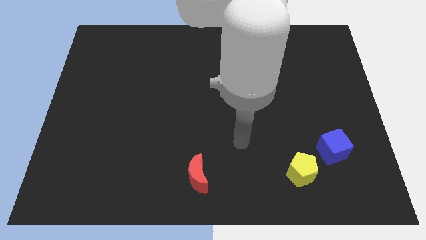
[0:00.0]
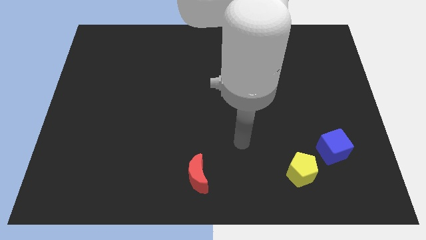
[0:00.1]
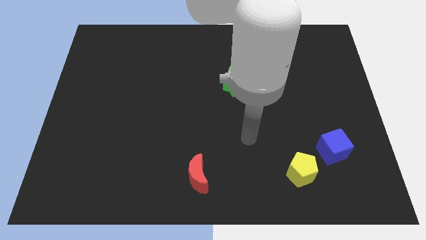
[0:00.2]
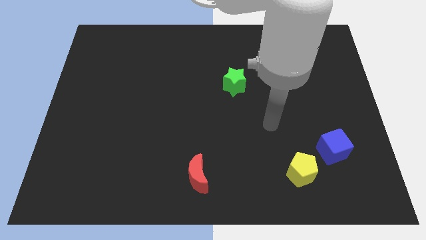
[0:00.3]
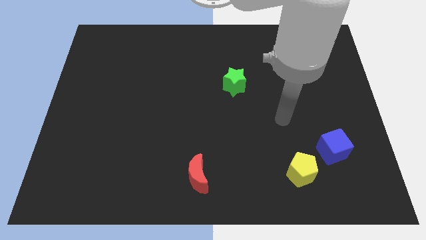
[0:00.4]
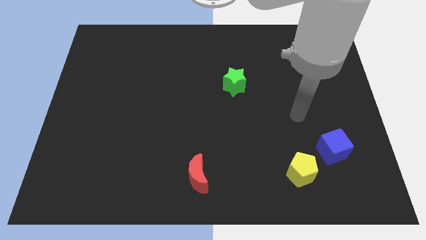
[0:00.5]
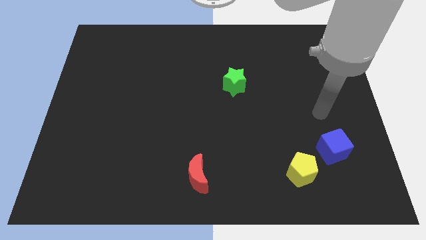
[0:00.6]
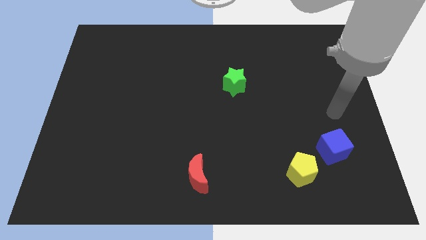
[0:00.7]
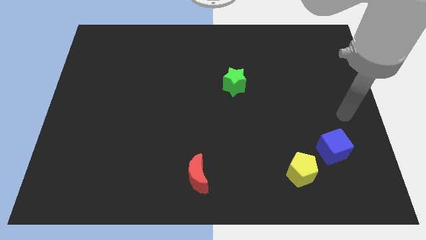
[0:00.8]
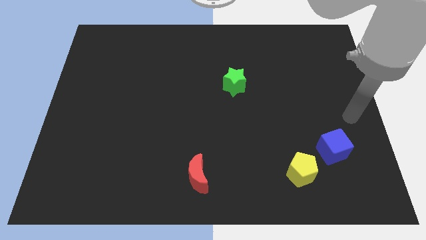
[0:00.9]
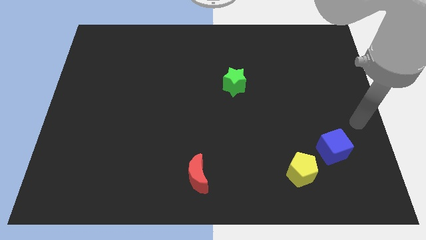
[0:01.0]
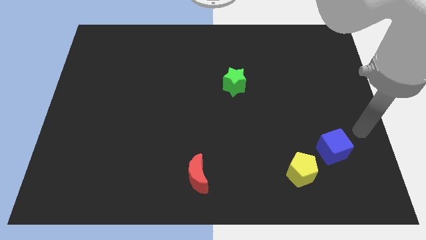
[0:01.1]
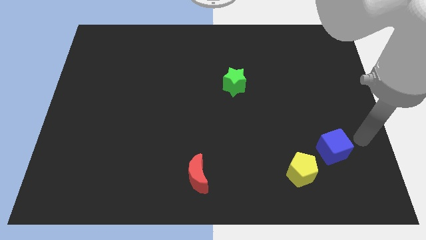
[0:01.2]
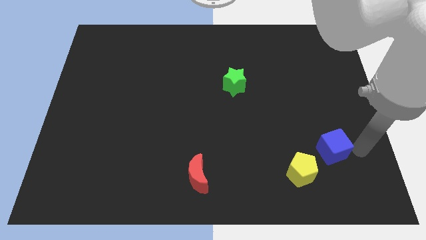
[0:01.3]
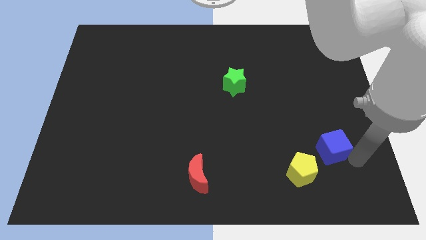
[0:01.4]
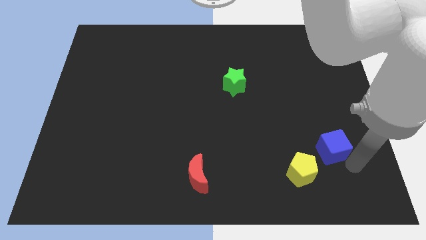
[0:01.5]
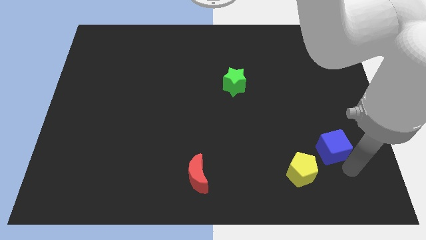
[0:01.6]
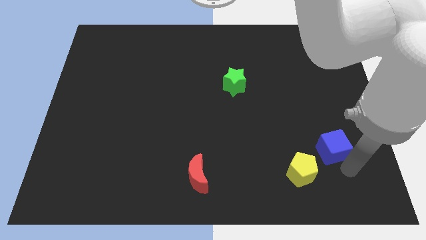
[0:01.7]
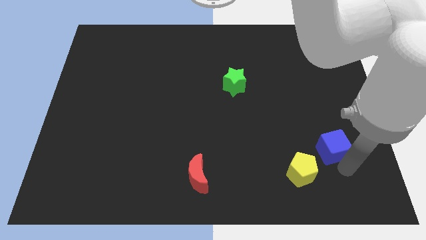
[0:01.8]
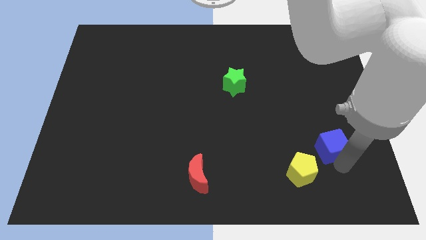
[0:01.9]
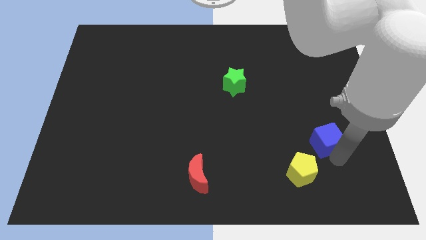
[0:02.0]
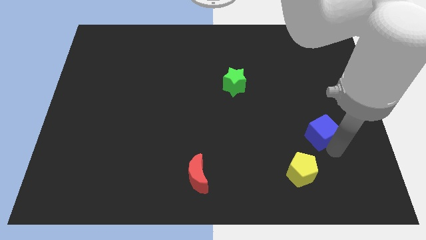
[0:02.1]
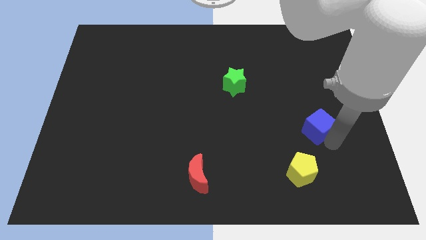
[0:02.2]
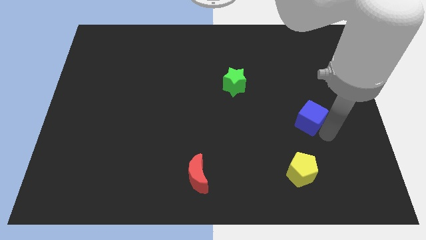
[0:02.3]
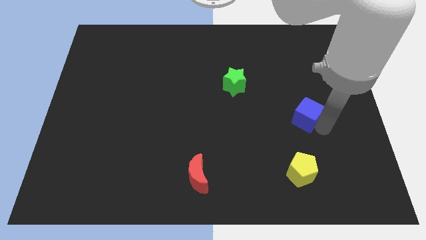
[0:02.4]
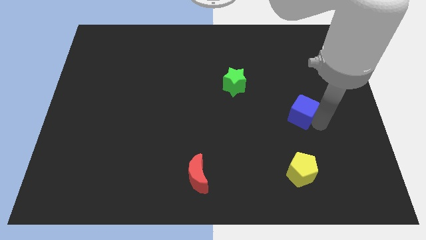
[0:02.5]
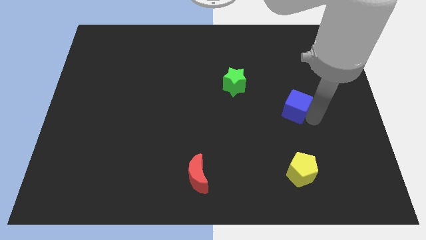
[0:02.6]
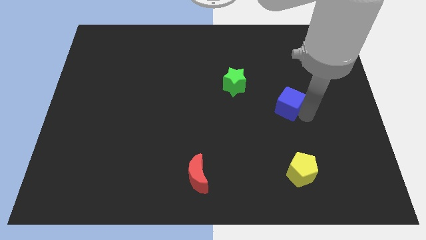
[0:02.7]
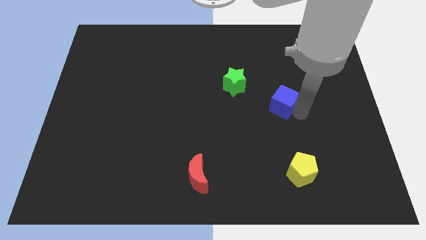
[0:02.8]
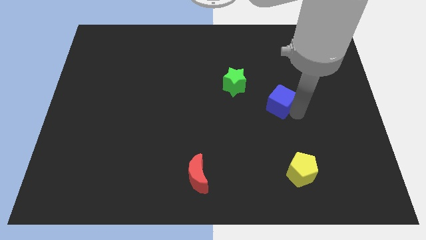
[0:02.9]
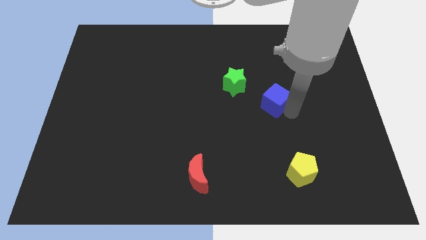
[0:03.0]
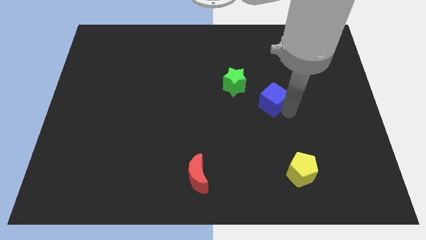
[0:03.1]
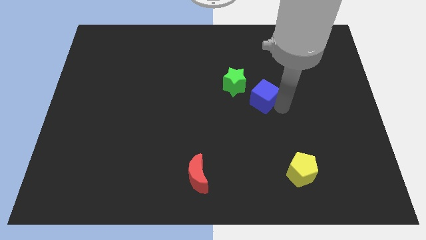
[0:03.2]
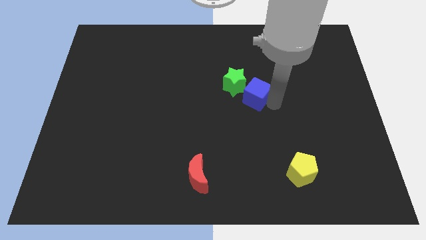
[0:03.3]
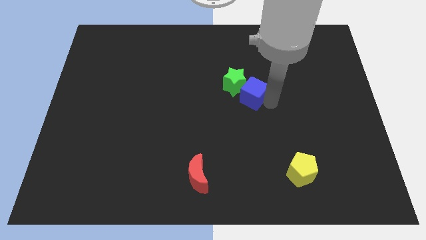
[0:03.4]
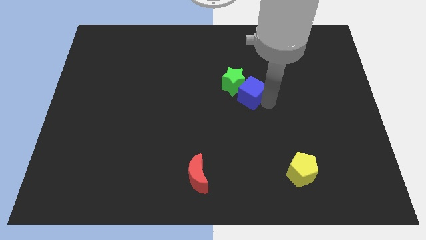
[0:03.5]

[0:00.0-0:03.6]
push the cube next to the star

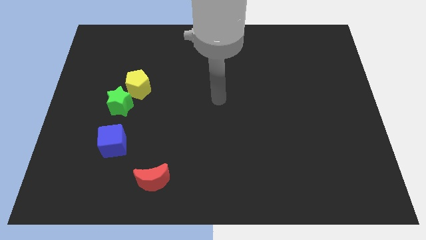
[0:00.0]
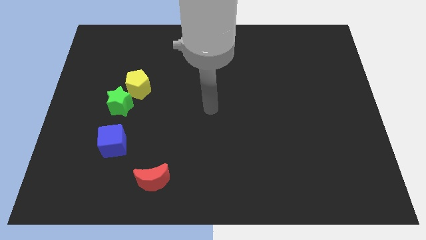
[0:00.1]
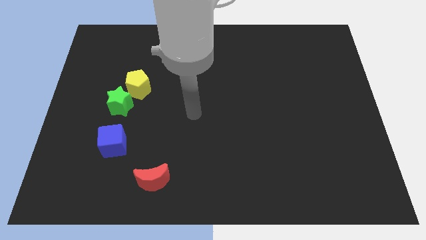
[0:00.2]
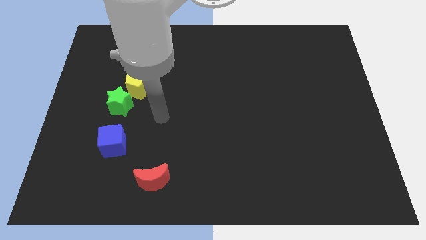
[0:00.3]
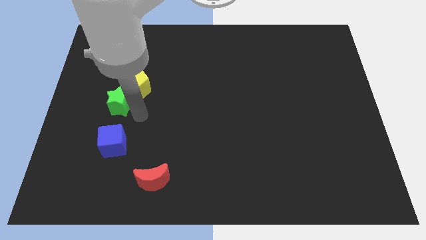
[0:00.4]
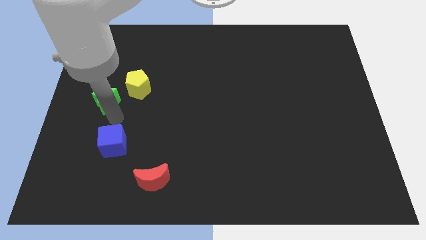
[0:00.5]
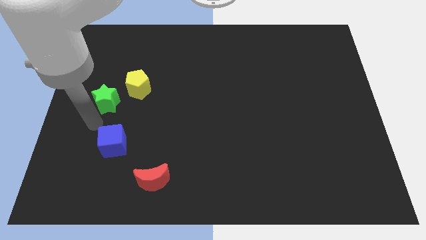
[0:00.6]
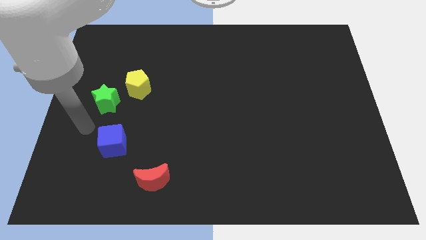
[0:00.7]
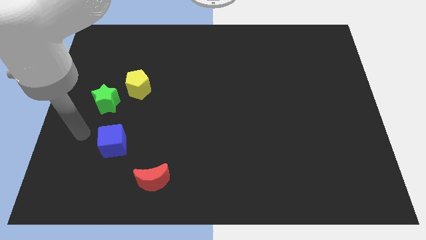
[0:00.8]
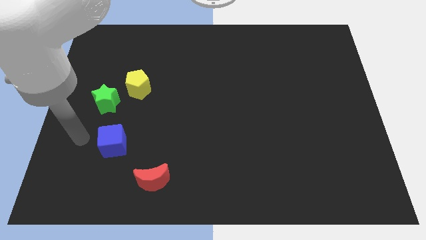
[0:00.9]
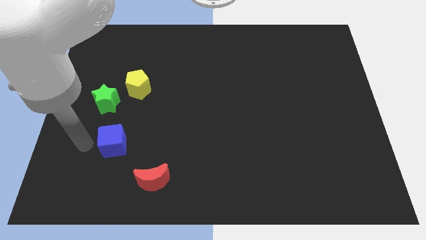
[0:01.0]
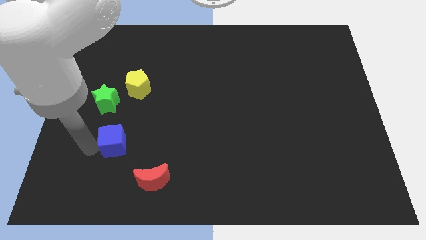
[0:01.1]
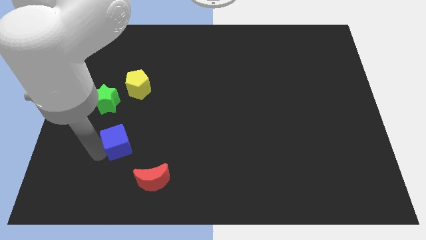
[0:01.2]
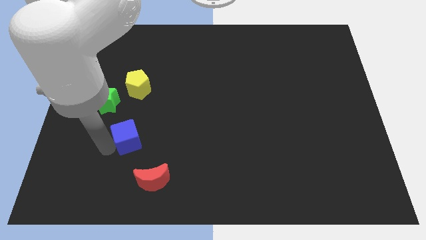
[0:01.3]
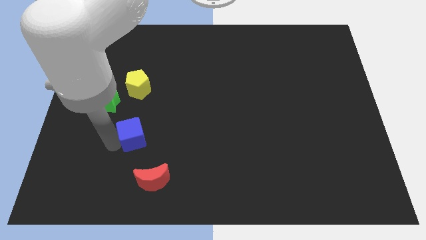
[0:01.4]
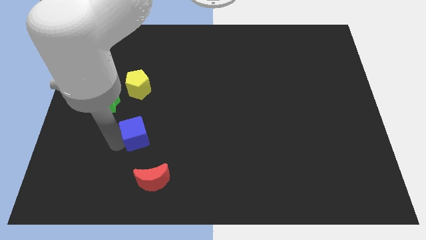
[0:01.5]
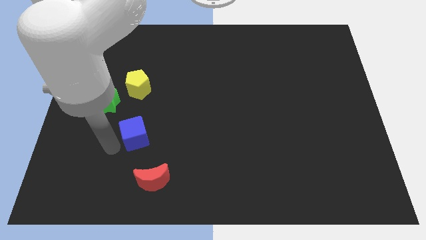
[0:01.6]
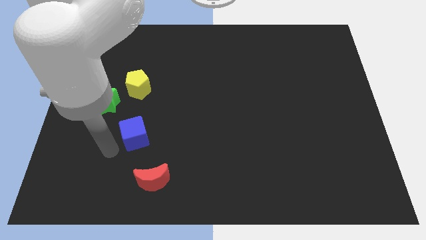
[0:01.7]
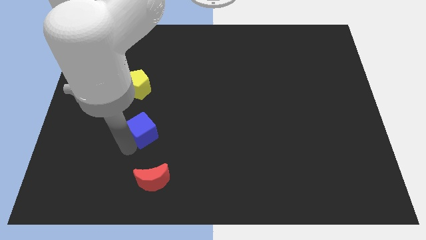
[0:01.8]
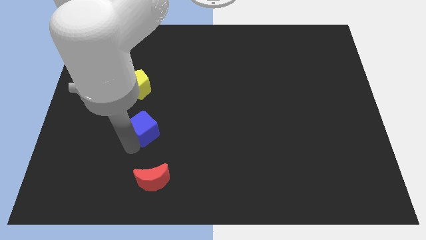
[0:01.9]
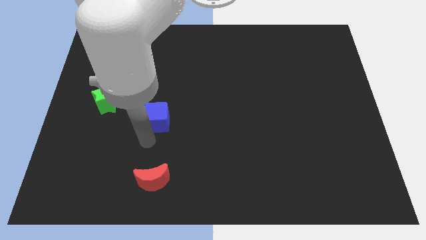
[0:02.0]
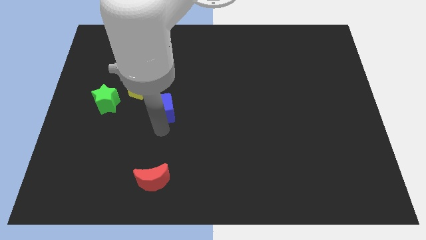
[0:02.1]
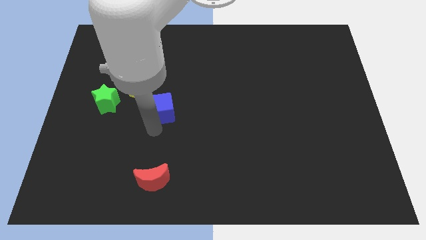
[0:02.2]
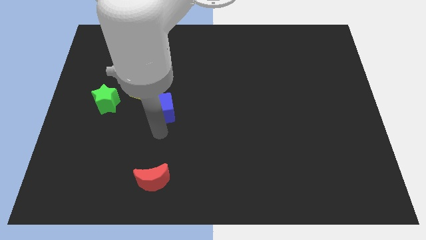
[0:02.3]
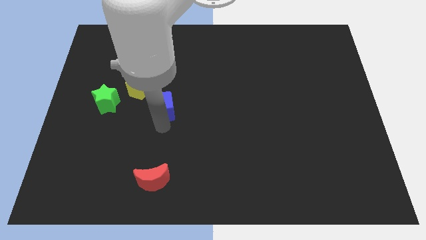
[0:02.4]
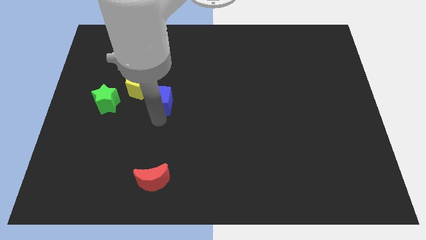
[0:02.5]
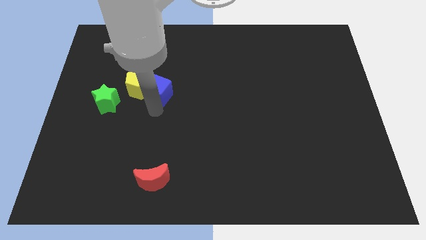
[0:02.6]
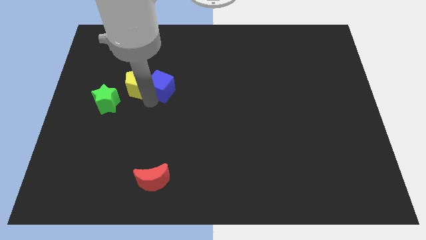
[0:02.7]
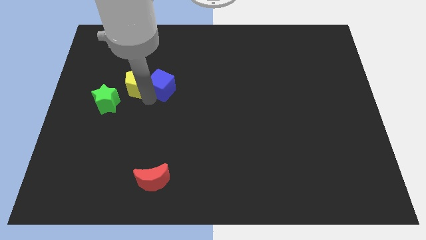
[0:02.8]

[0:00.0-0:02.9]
put the blue block to the yellow pentagon

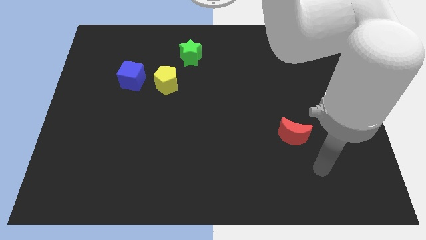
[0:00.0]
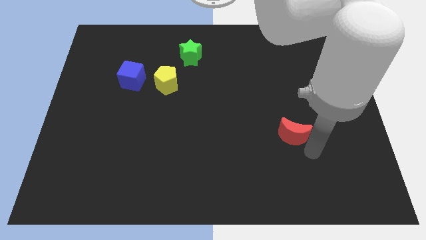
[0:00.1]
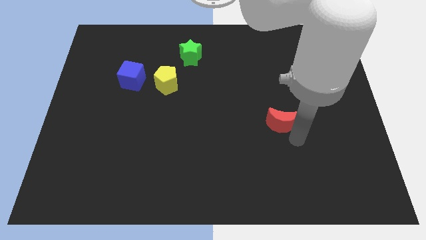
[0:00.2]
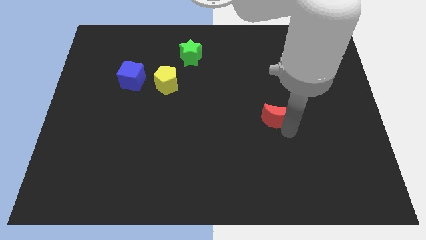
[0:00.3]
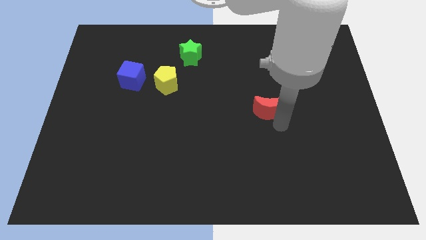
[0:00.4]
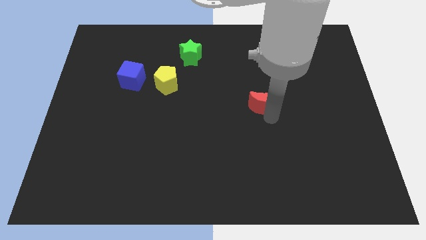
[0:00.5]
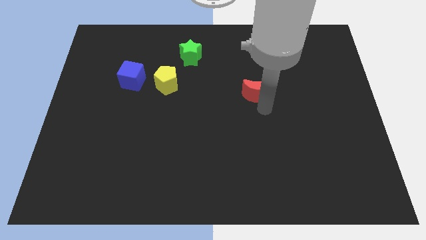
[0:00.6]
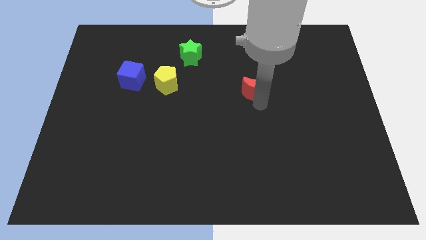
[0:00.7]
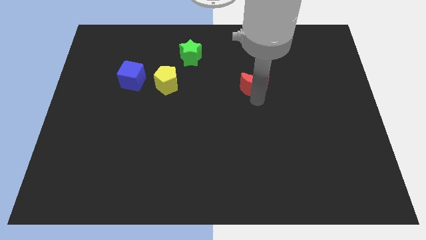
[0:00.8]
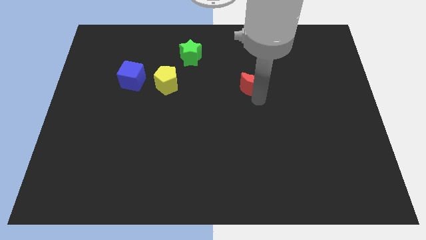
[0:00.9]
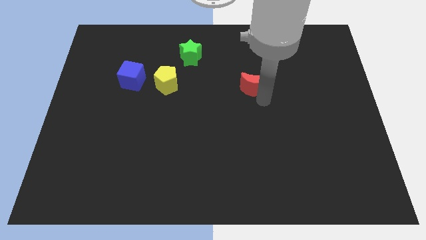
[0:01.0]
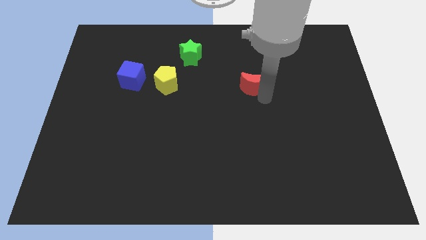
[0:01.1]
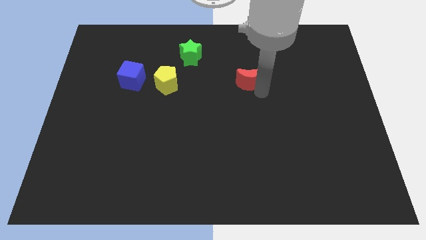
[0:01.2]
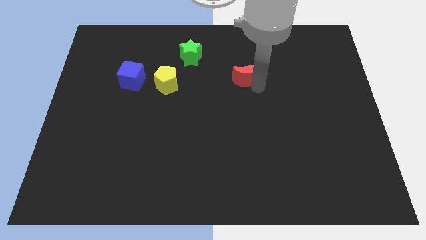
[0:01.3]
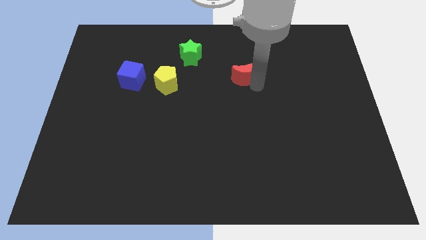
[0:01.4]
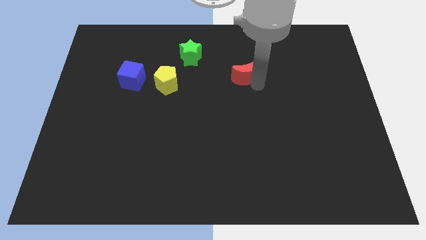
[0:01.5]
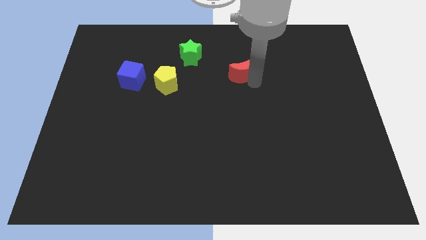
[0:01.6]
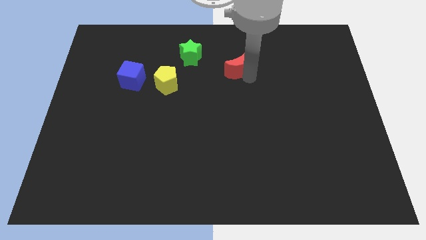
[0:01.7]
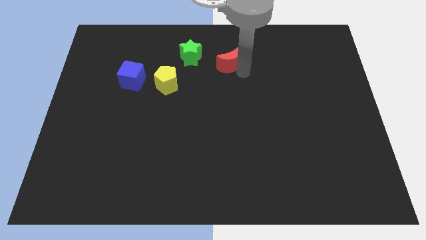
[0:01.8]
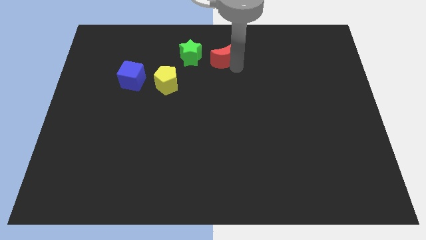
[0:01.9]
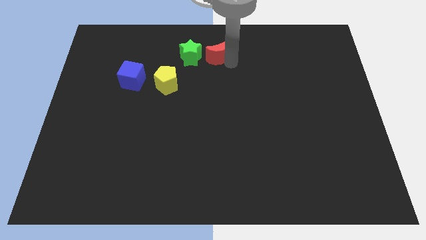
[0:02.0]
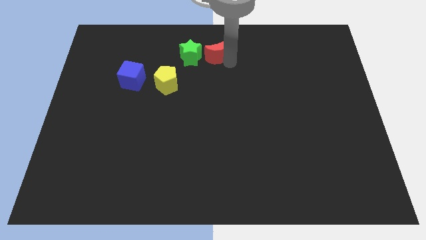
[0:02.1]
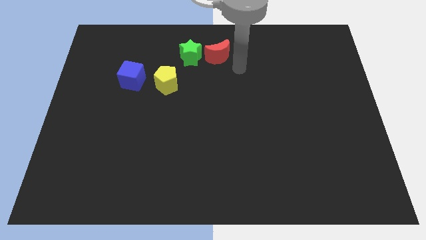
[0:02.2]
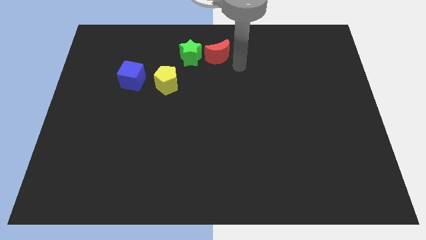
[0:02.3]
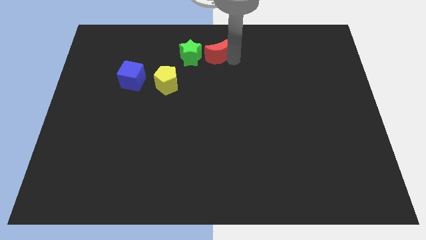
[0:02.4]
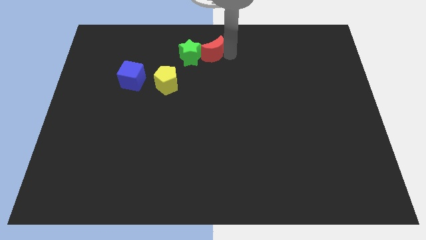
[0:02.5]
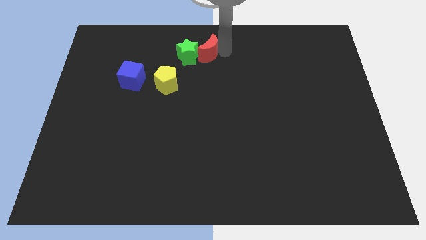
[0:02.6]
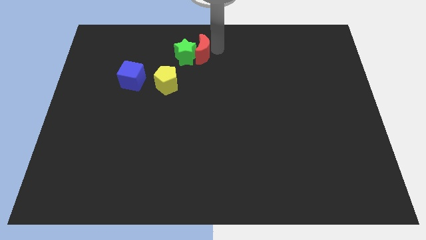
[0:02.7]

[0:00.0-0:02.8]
slide the red moon close to the star
